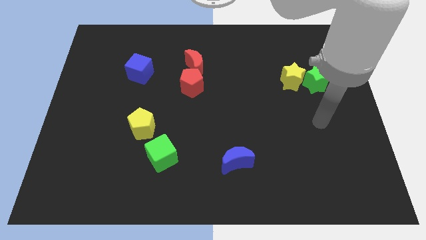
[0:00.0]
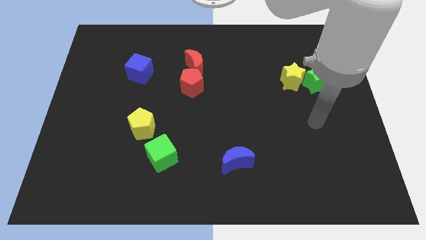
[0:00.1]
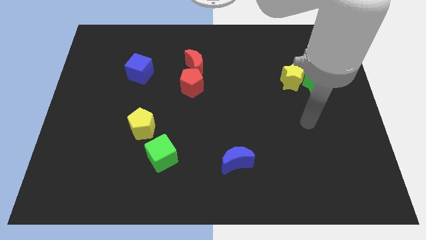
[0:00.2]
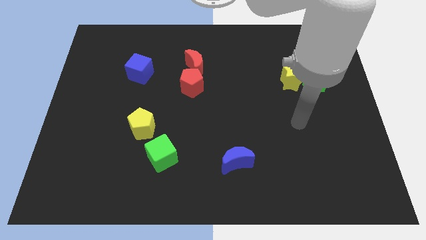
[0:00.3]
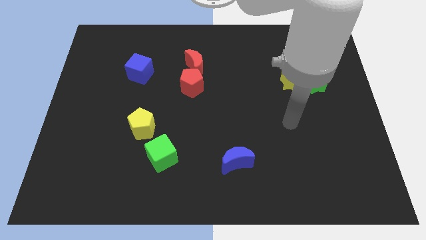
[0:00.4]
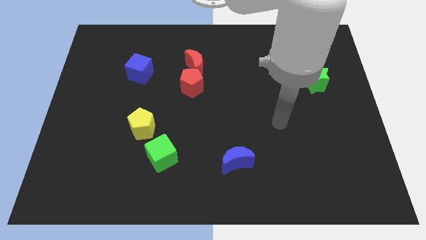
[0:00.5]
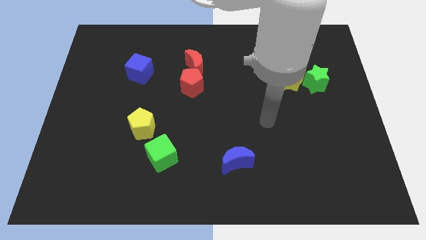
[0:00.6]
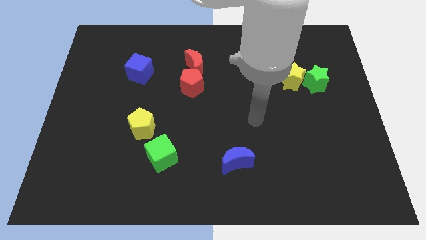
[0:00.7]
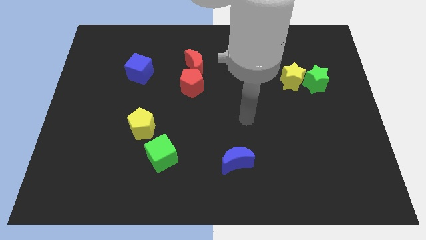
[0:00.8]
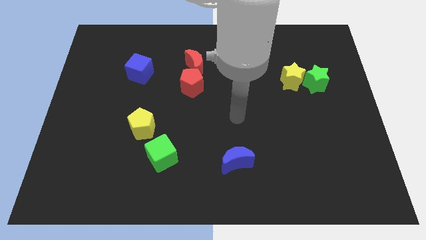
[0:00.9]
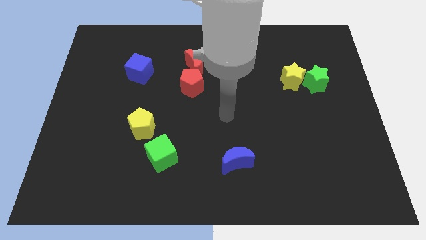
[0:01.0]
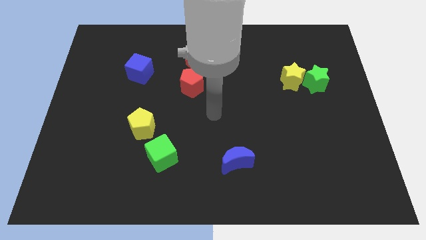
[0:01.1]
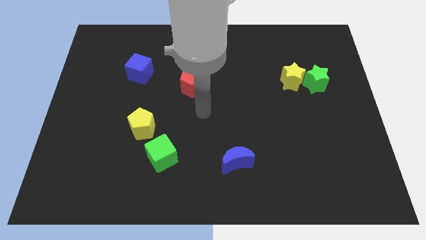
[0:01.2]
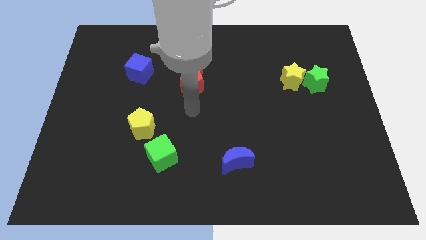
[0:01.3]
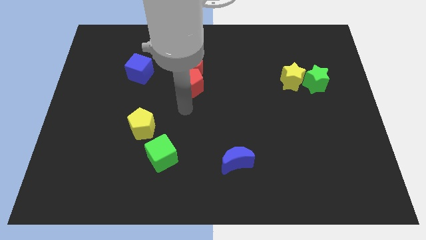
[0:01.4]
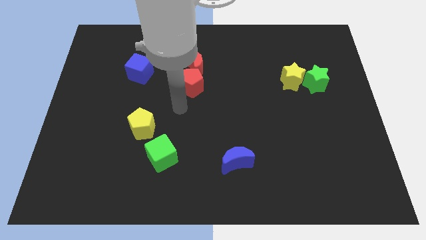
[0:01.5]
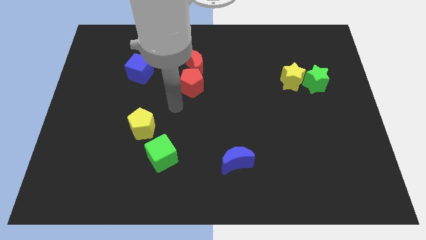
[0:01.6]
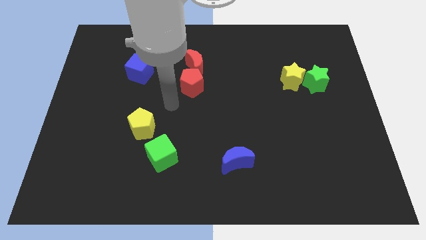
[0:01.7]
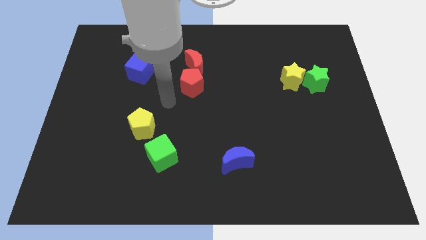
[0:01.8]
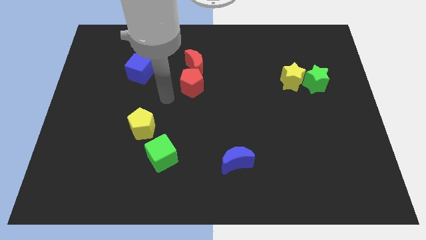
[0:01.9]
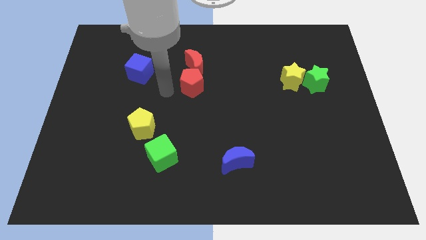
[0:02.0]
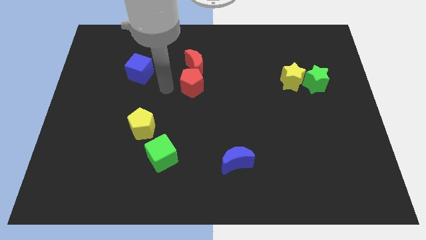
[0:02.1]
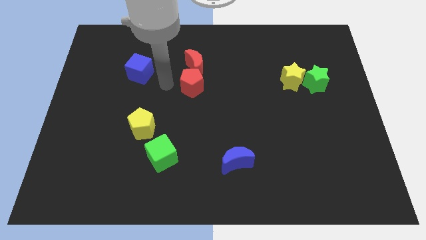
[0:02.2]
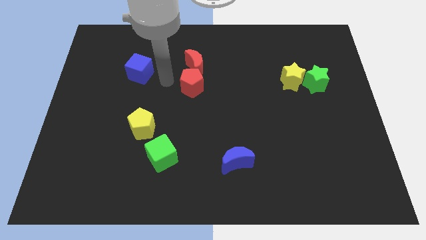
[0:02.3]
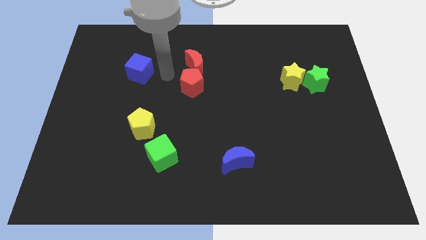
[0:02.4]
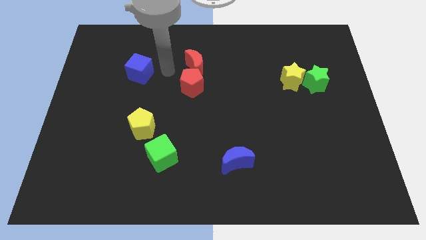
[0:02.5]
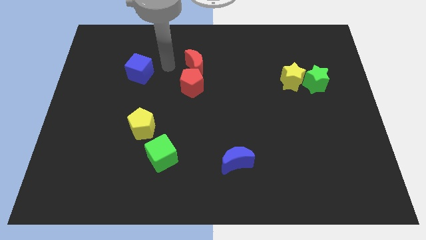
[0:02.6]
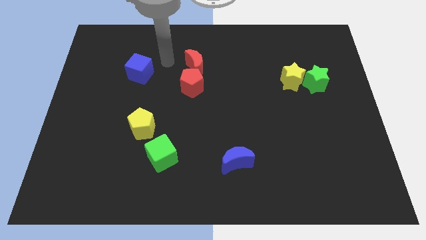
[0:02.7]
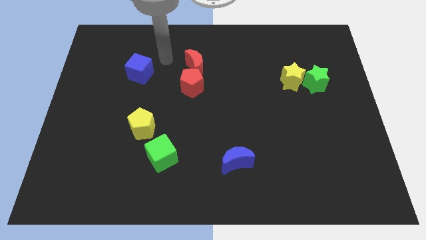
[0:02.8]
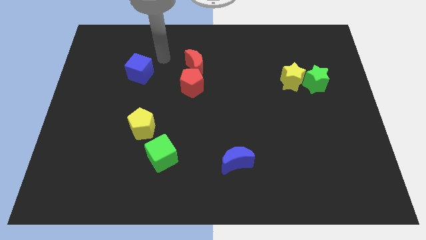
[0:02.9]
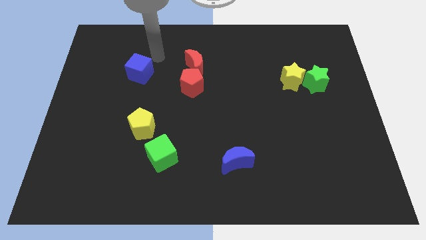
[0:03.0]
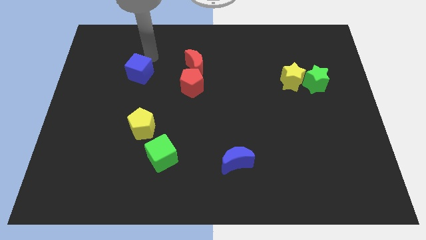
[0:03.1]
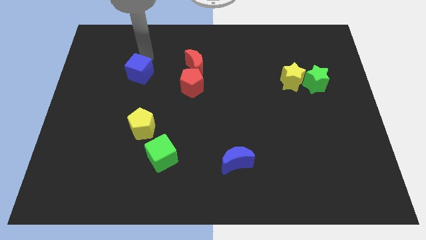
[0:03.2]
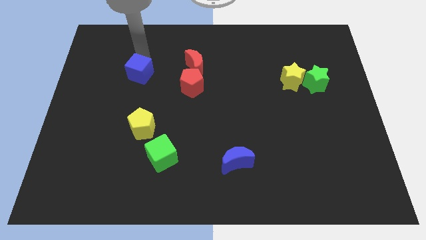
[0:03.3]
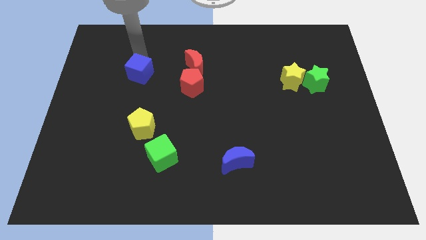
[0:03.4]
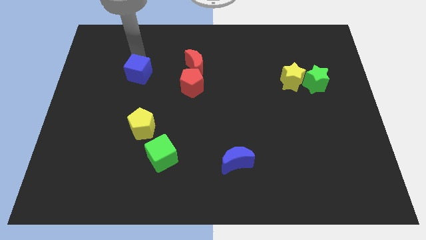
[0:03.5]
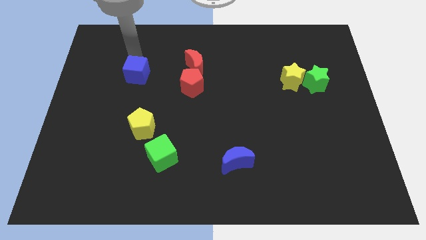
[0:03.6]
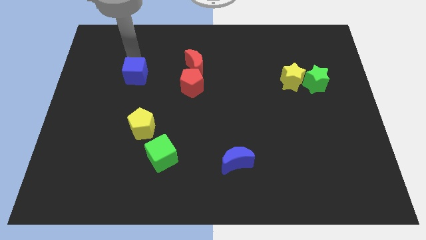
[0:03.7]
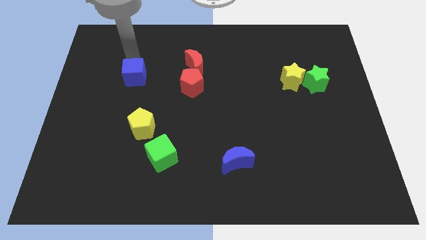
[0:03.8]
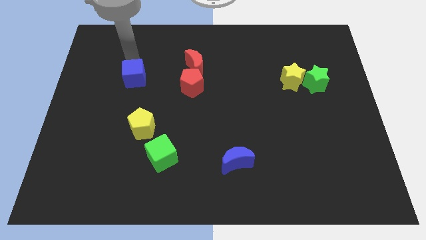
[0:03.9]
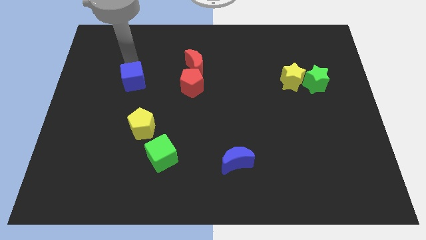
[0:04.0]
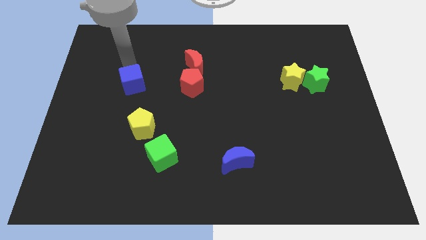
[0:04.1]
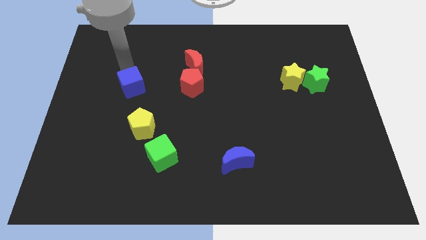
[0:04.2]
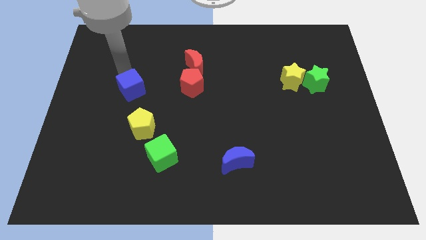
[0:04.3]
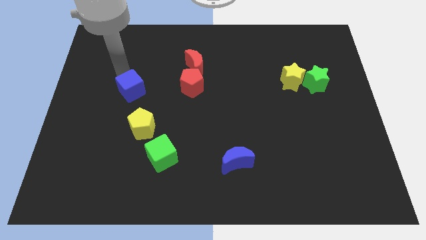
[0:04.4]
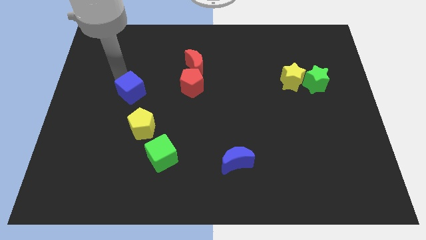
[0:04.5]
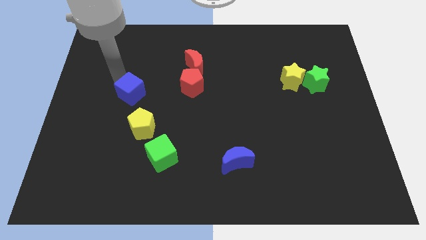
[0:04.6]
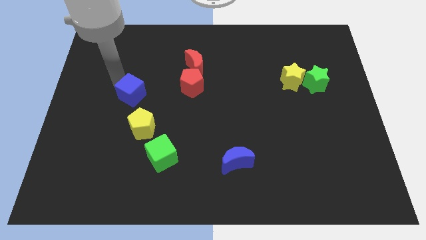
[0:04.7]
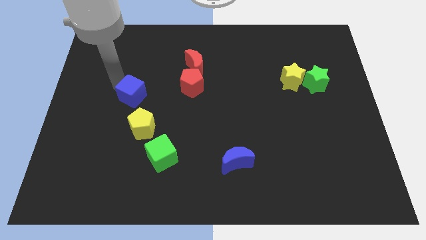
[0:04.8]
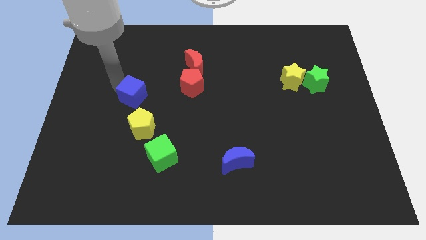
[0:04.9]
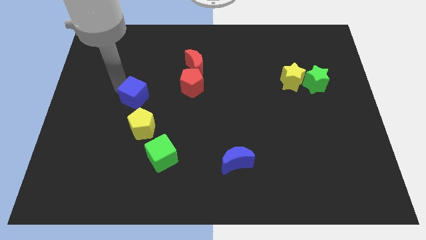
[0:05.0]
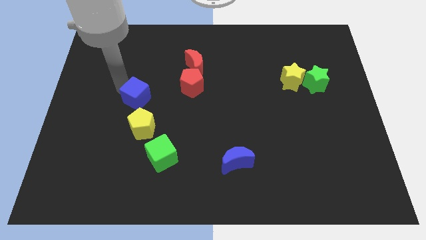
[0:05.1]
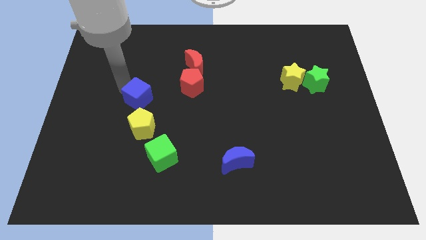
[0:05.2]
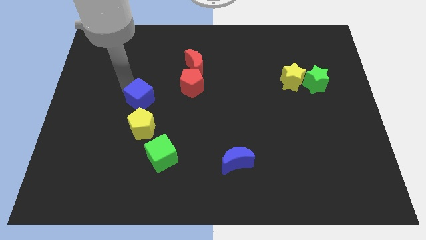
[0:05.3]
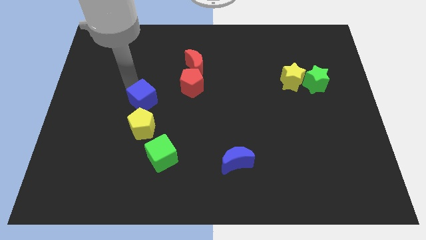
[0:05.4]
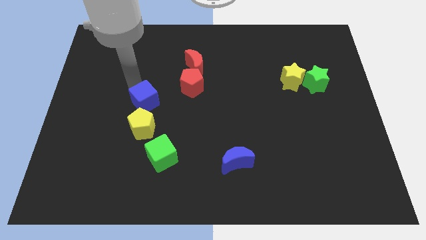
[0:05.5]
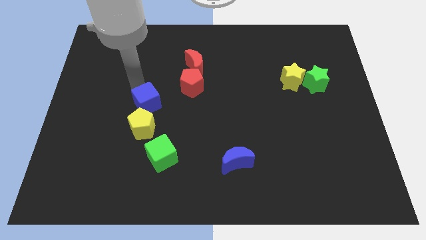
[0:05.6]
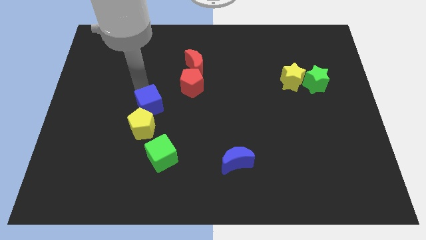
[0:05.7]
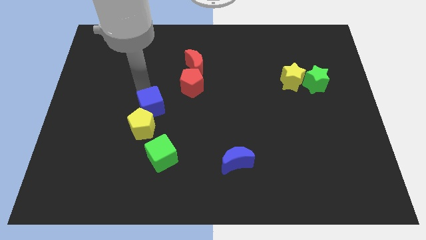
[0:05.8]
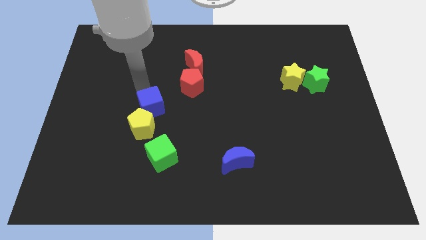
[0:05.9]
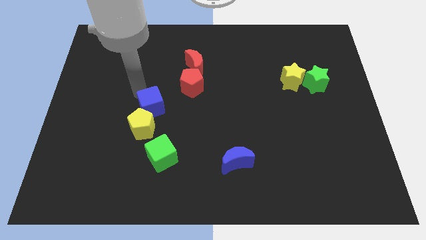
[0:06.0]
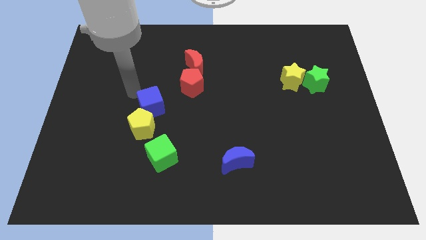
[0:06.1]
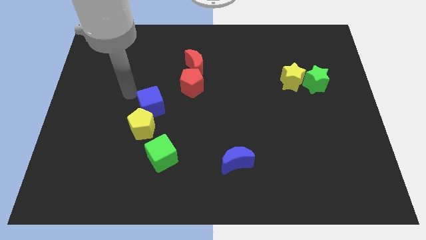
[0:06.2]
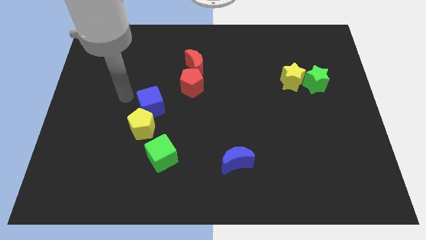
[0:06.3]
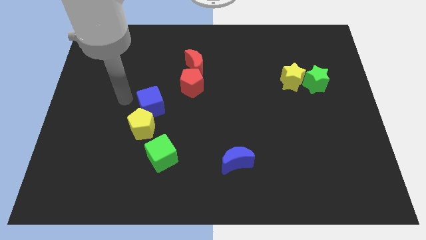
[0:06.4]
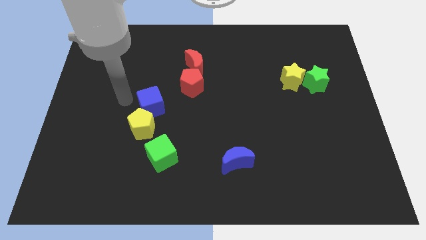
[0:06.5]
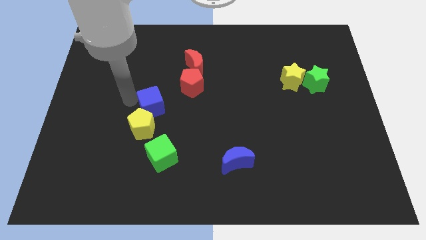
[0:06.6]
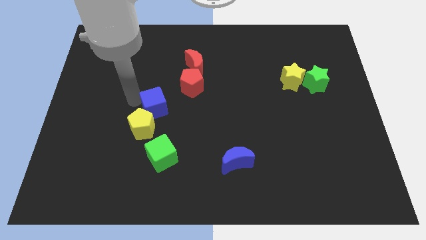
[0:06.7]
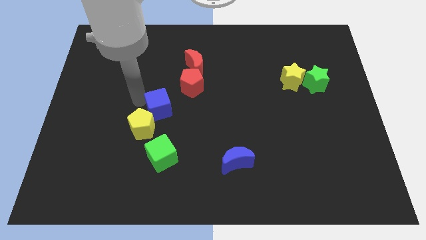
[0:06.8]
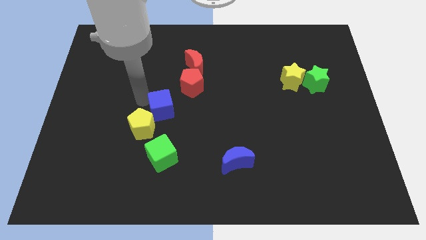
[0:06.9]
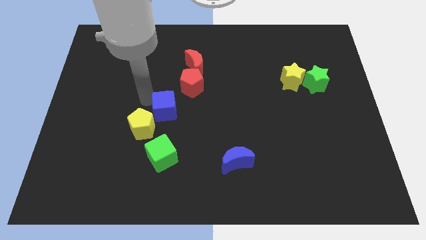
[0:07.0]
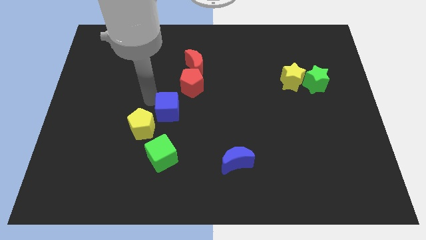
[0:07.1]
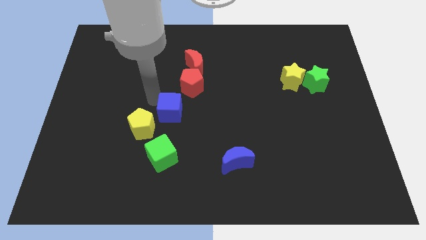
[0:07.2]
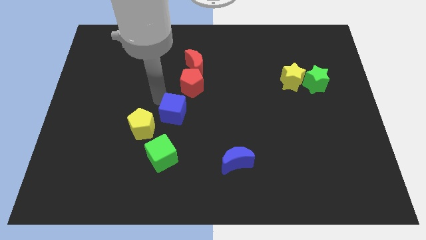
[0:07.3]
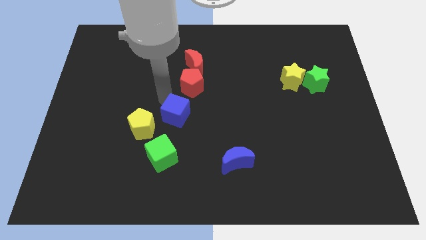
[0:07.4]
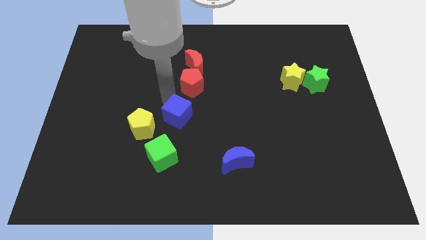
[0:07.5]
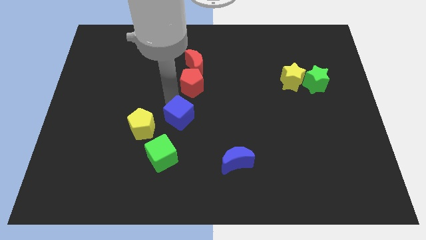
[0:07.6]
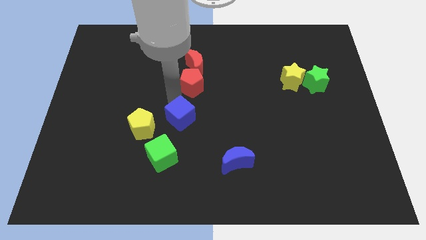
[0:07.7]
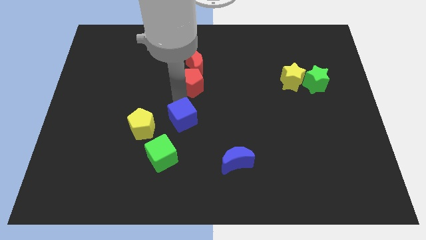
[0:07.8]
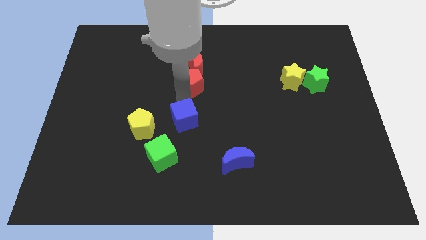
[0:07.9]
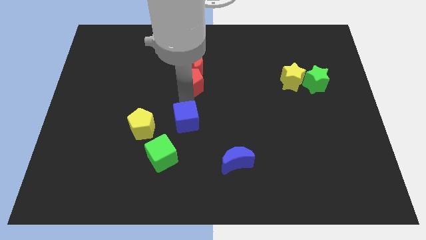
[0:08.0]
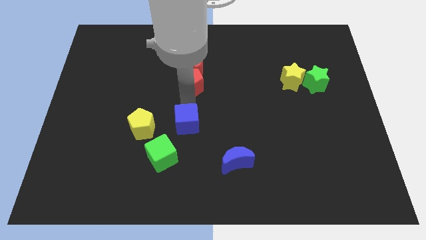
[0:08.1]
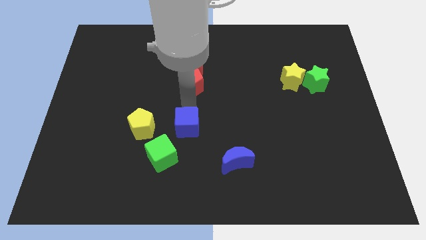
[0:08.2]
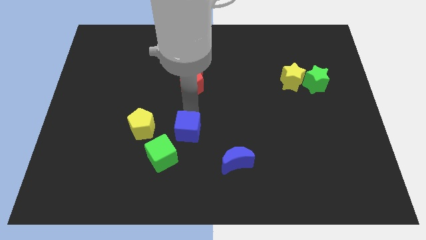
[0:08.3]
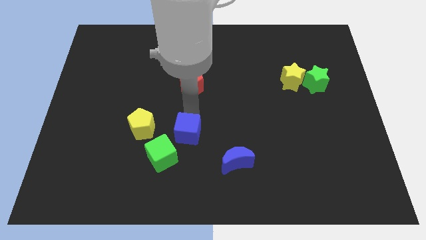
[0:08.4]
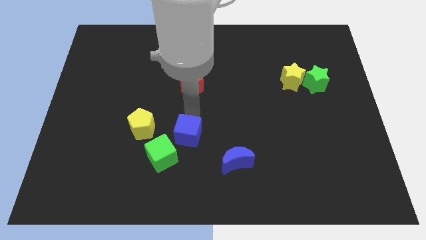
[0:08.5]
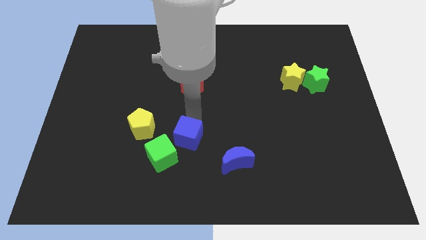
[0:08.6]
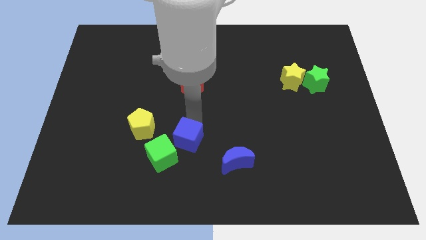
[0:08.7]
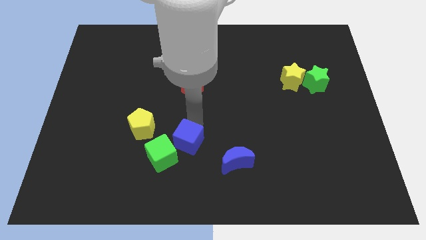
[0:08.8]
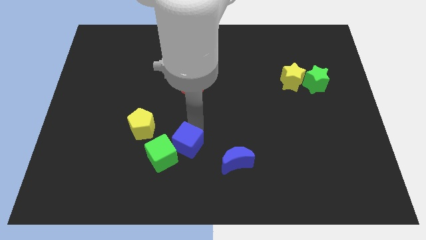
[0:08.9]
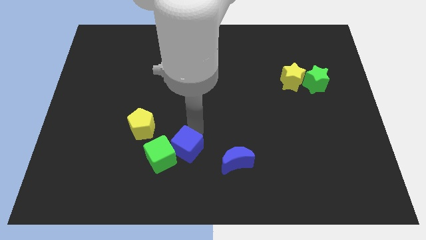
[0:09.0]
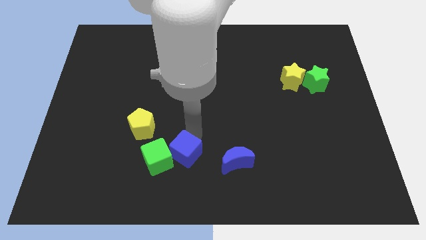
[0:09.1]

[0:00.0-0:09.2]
slide the blue cube next to the green cube
